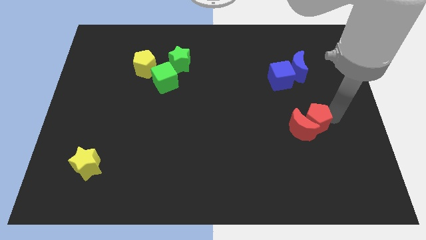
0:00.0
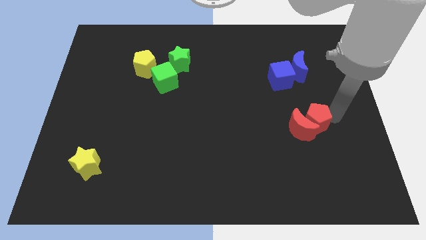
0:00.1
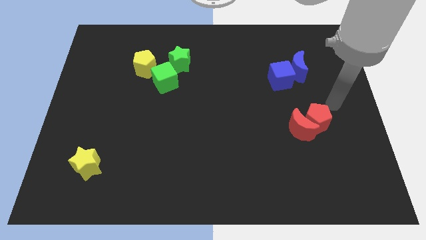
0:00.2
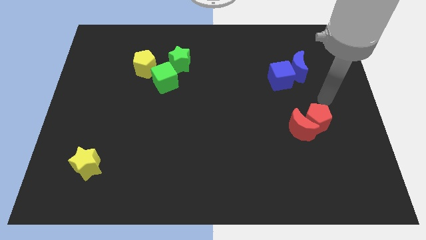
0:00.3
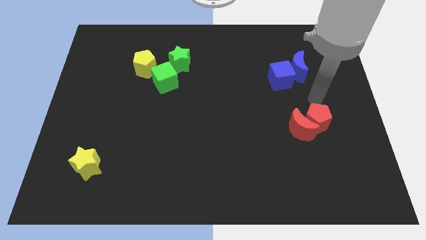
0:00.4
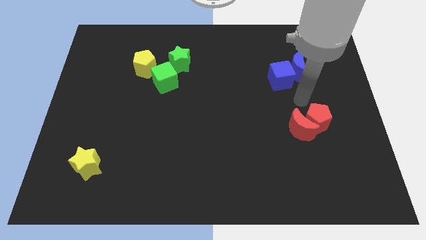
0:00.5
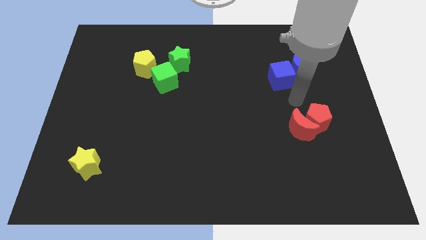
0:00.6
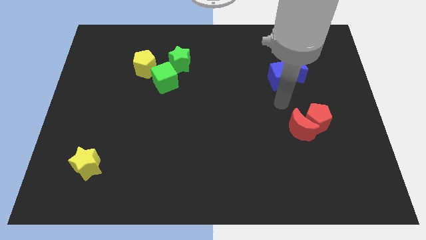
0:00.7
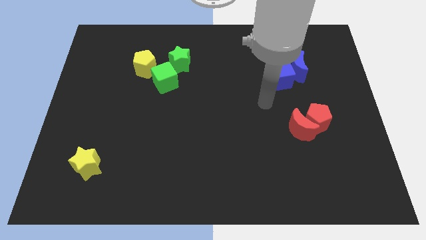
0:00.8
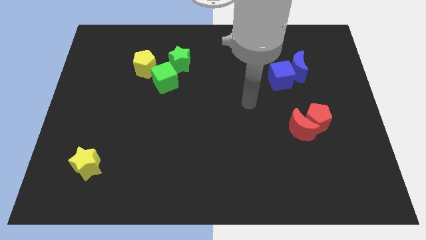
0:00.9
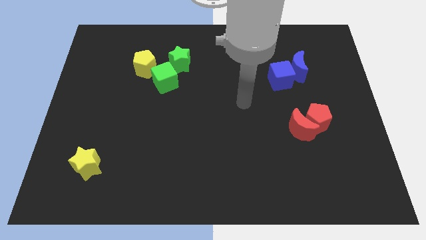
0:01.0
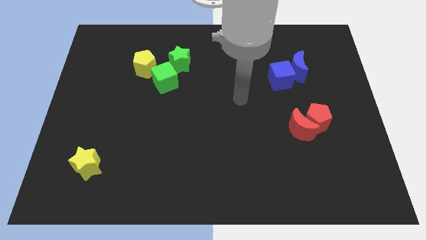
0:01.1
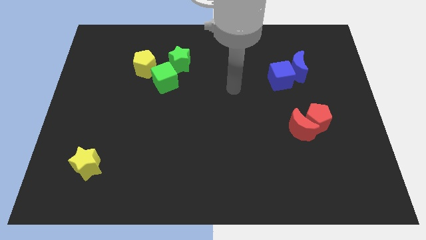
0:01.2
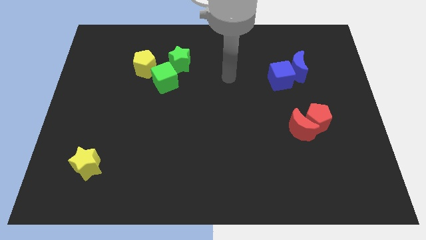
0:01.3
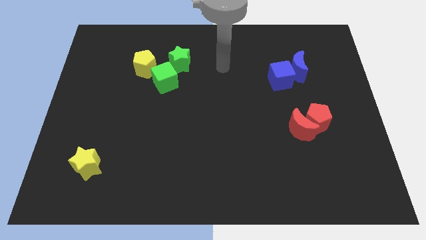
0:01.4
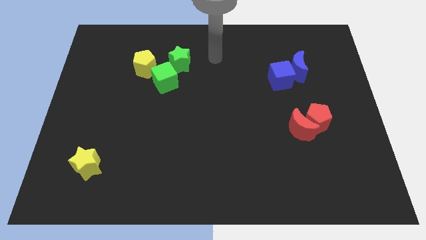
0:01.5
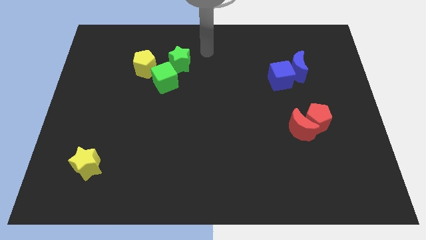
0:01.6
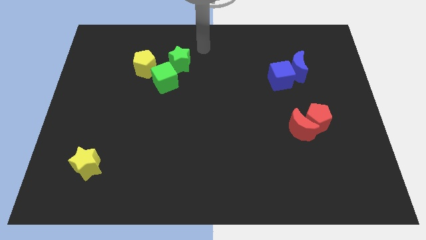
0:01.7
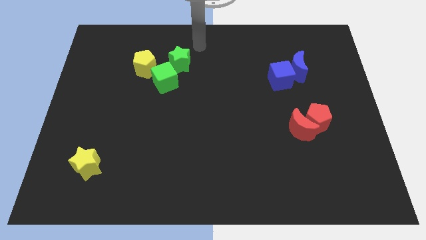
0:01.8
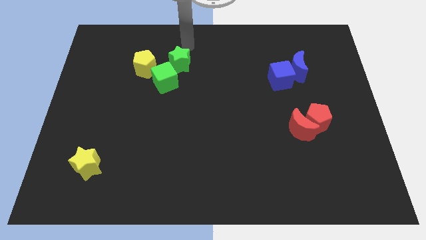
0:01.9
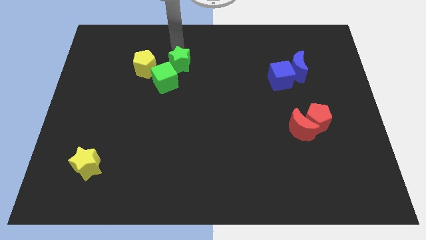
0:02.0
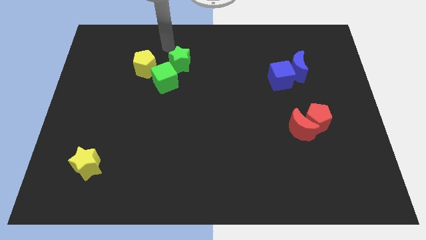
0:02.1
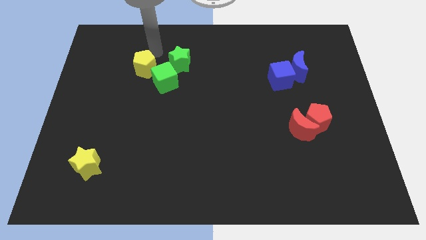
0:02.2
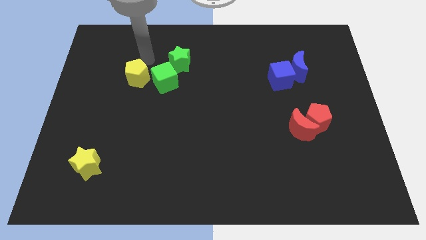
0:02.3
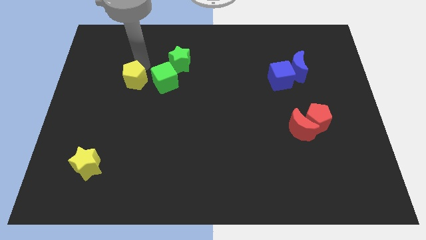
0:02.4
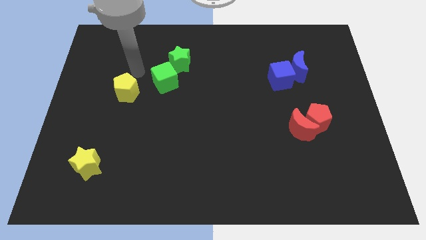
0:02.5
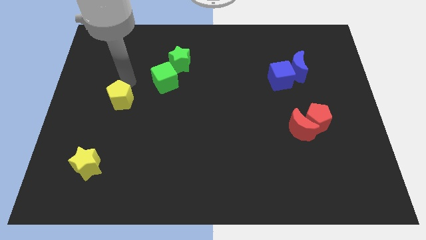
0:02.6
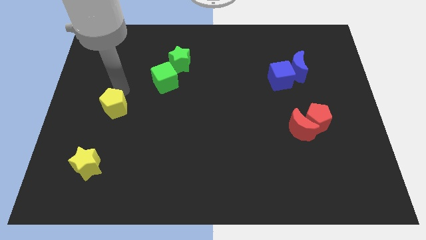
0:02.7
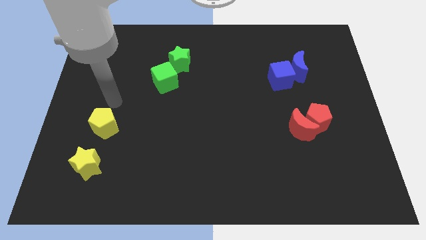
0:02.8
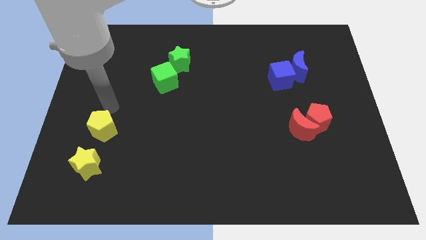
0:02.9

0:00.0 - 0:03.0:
separate the yellow pentagon from green cube

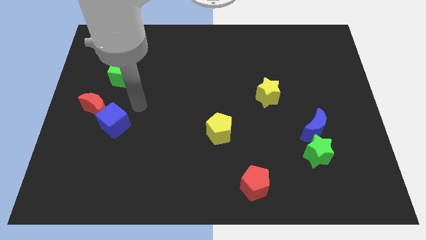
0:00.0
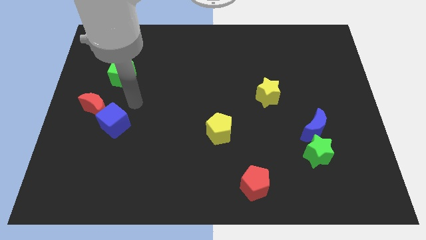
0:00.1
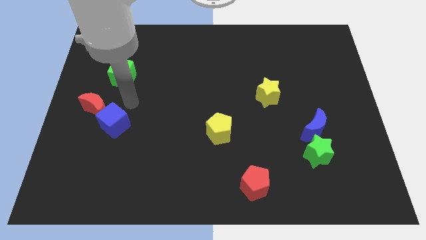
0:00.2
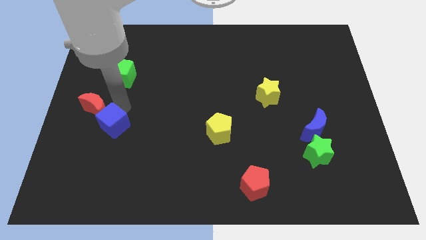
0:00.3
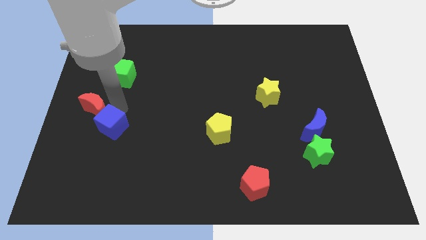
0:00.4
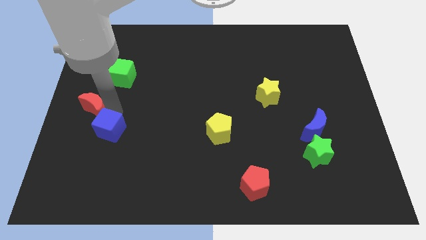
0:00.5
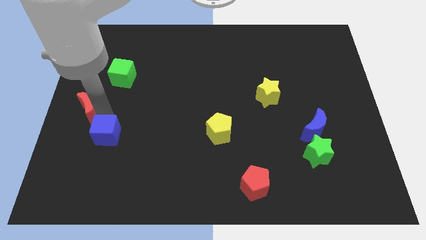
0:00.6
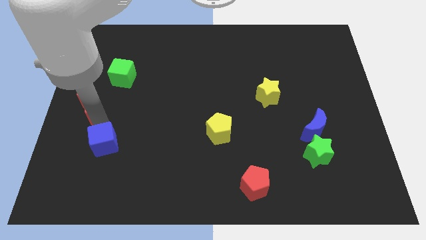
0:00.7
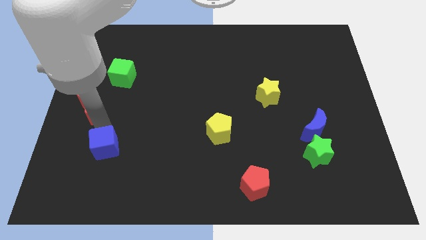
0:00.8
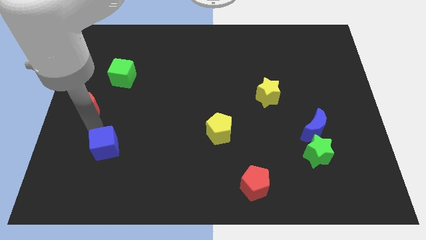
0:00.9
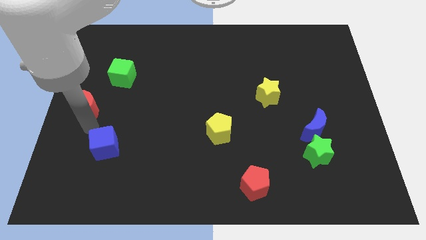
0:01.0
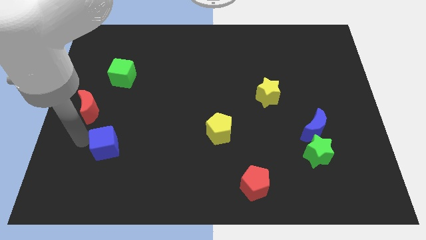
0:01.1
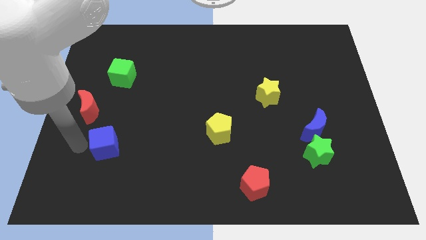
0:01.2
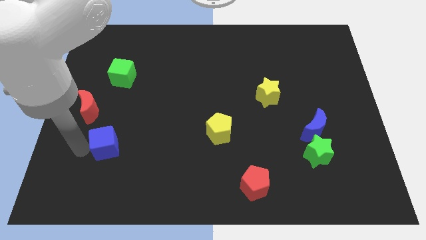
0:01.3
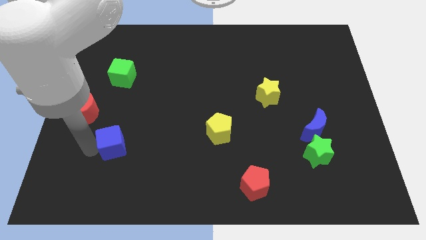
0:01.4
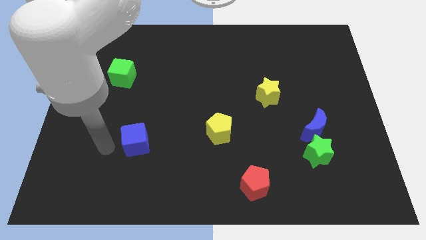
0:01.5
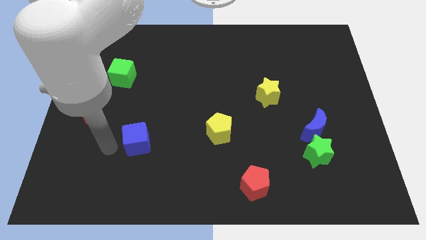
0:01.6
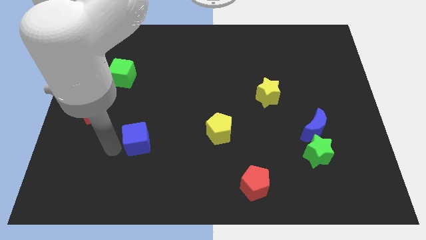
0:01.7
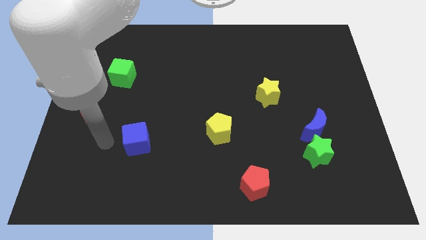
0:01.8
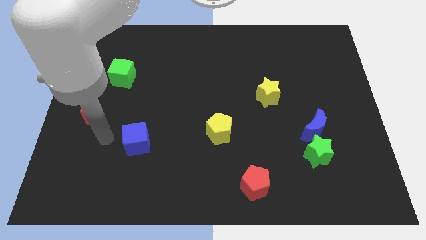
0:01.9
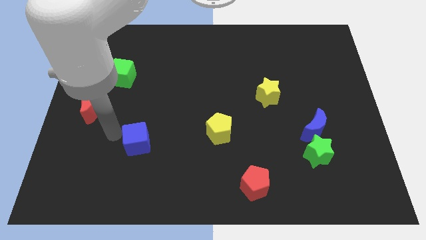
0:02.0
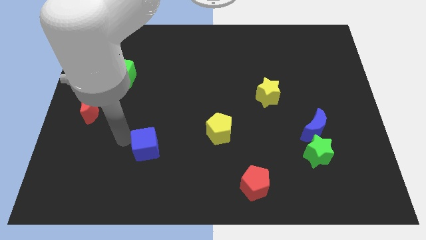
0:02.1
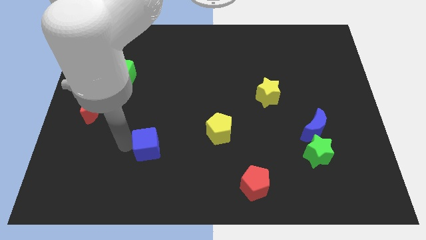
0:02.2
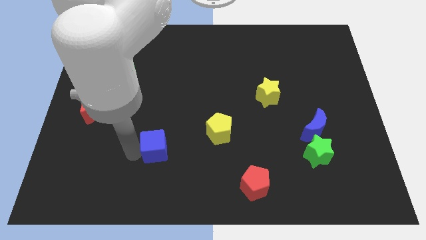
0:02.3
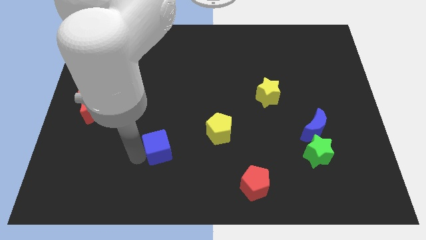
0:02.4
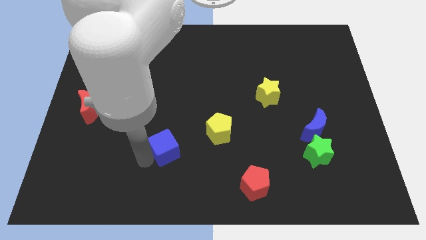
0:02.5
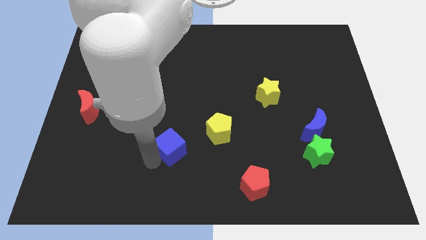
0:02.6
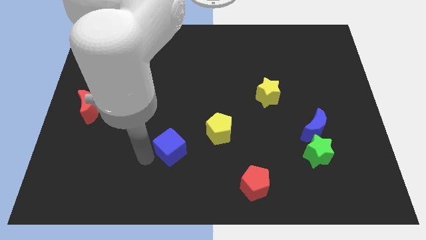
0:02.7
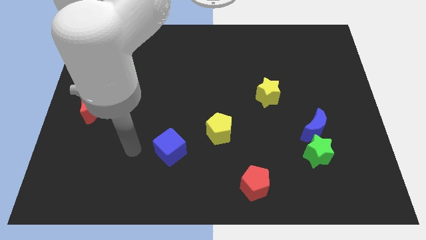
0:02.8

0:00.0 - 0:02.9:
push blue cube apart from red crescent

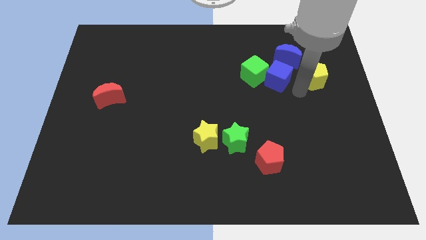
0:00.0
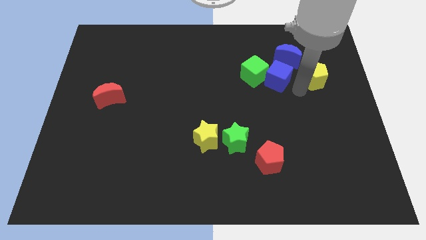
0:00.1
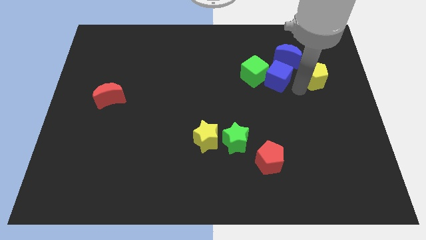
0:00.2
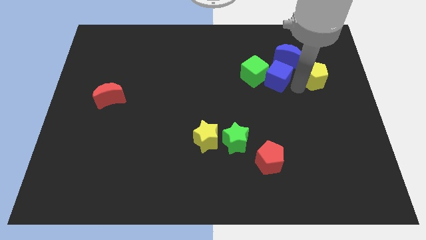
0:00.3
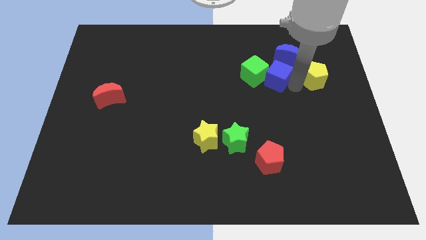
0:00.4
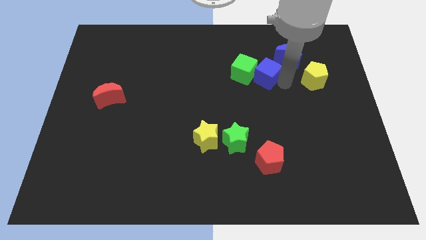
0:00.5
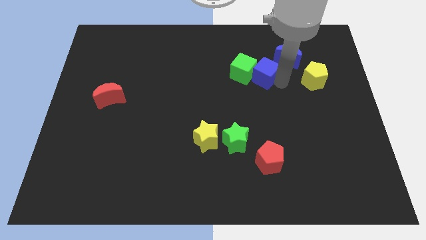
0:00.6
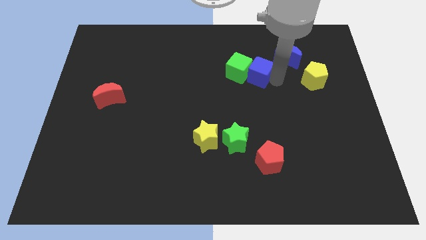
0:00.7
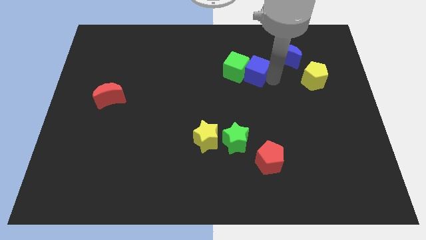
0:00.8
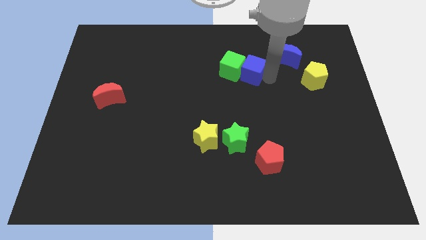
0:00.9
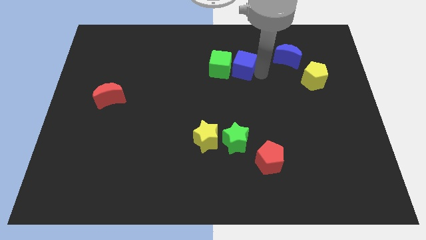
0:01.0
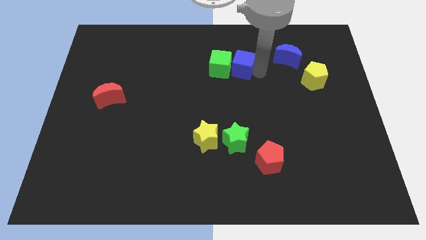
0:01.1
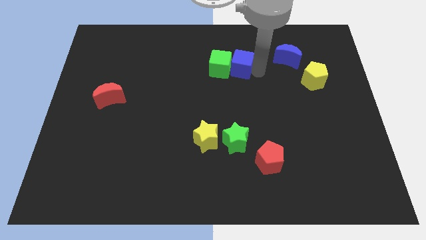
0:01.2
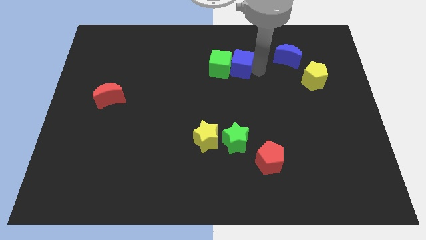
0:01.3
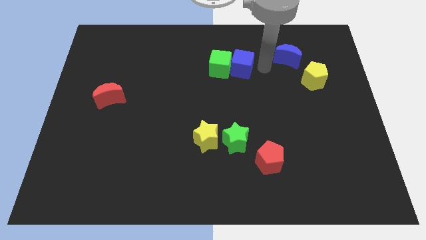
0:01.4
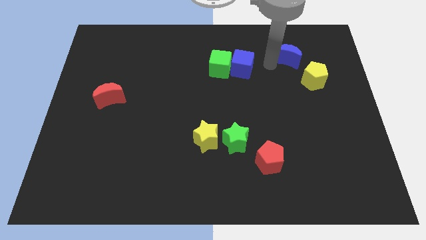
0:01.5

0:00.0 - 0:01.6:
move the blue cube along with green cube to the left

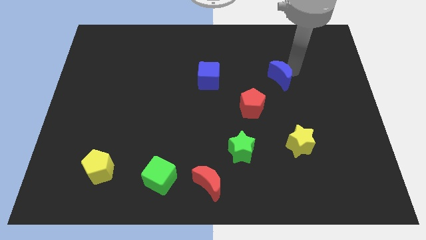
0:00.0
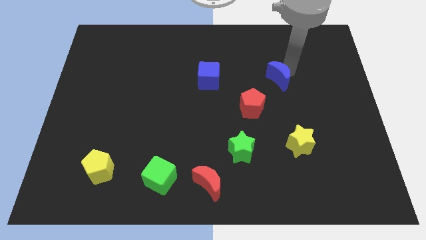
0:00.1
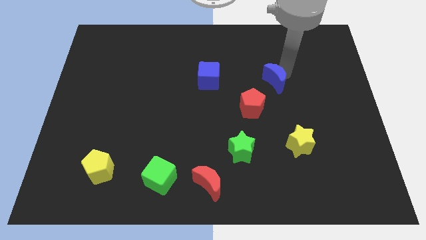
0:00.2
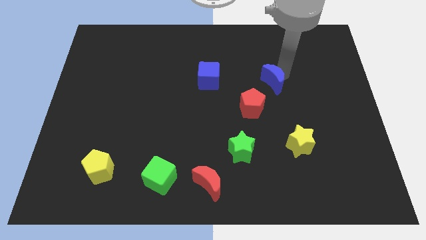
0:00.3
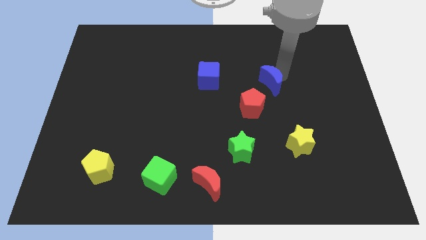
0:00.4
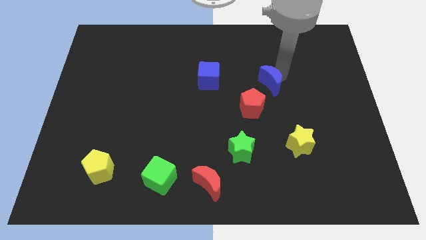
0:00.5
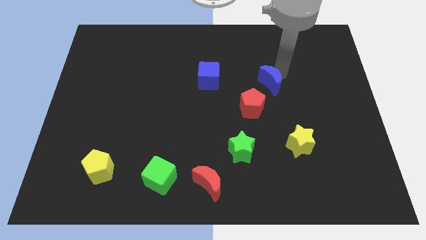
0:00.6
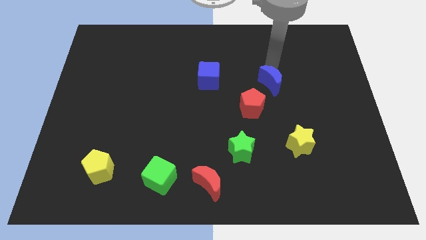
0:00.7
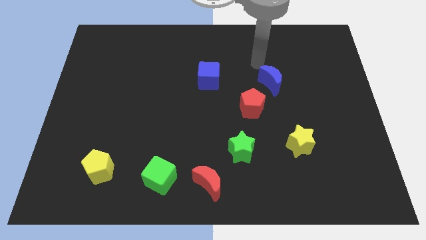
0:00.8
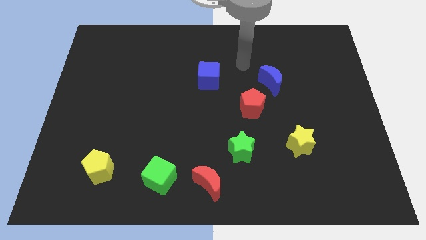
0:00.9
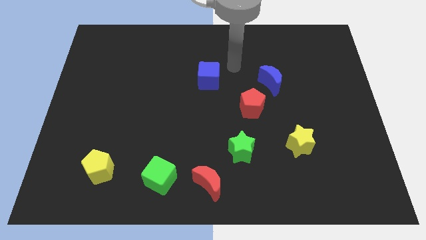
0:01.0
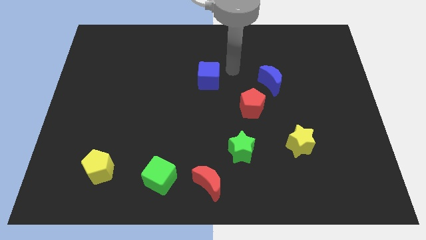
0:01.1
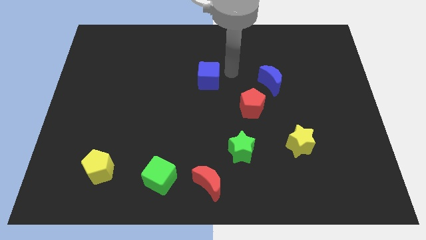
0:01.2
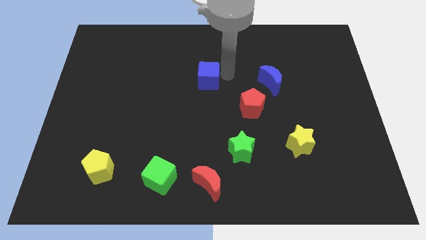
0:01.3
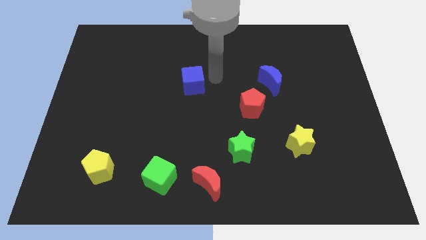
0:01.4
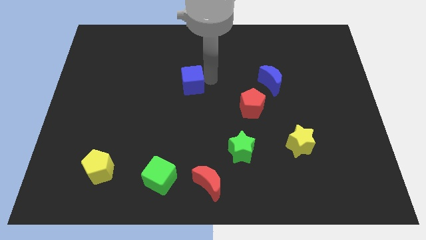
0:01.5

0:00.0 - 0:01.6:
slide the blue moon to the top right of red pentagon
